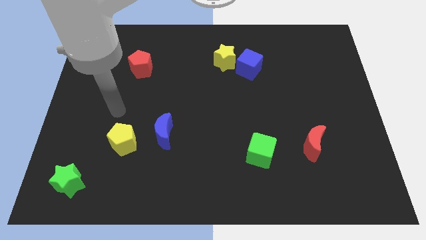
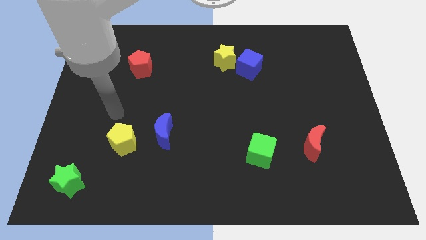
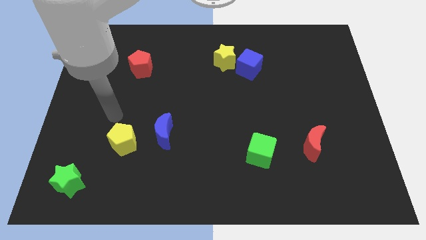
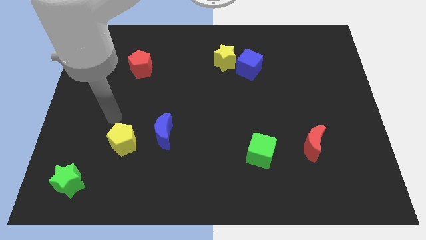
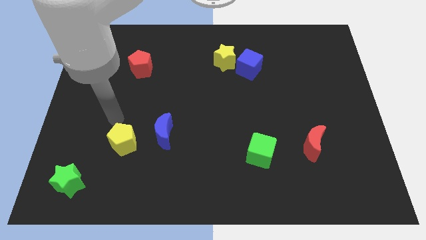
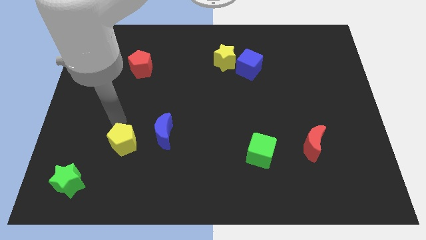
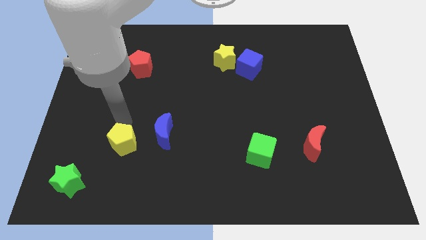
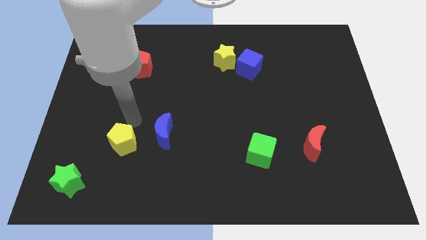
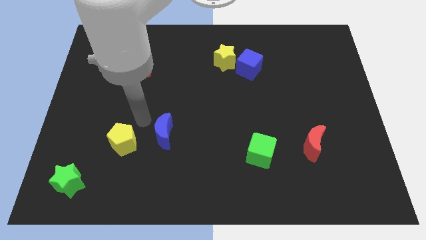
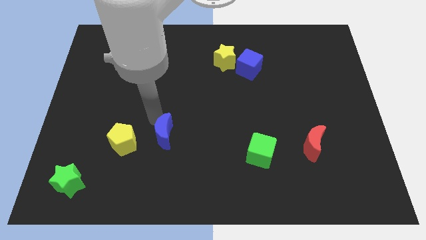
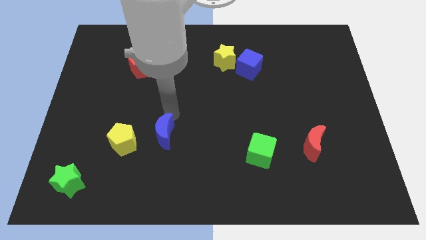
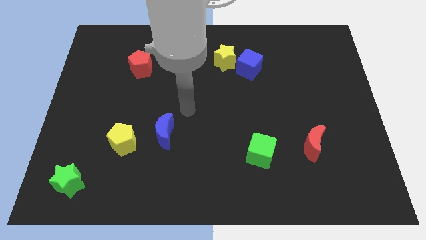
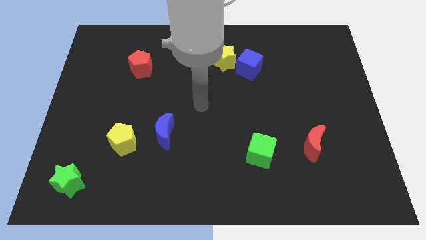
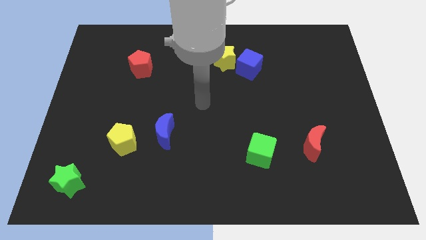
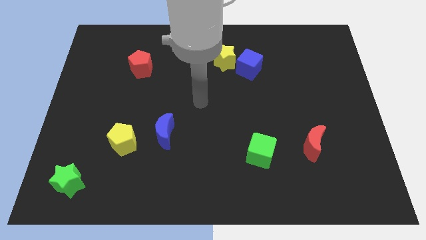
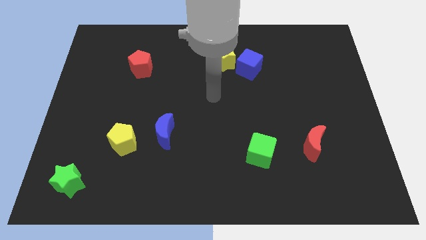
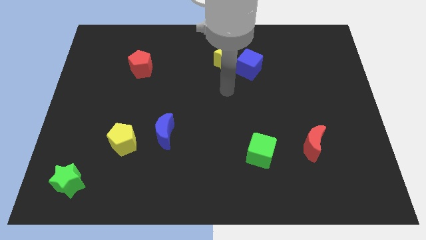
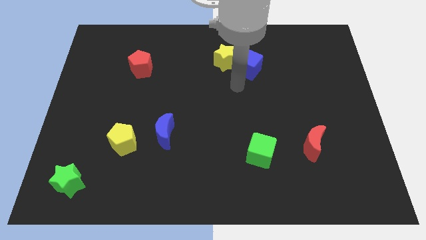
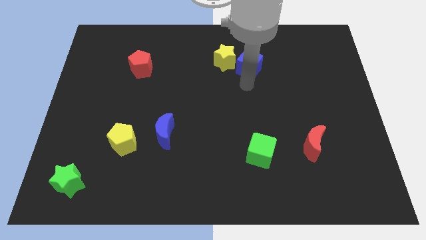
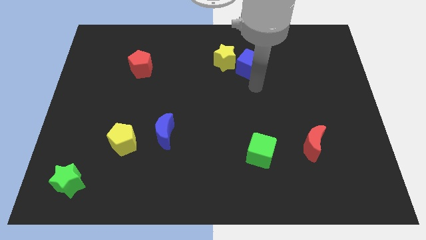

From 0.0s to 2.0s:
place the arm below the blue cube

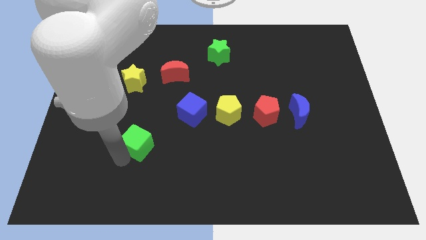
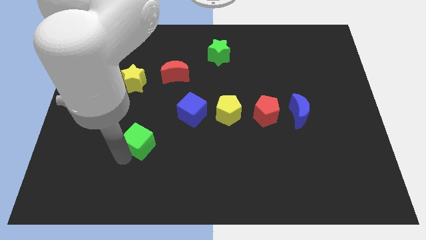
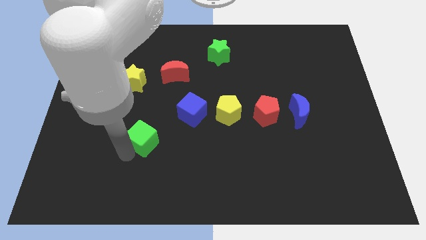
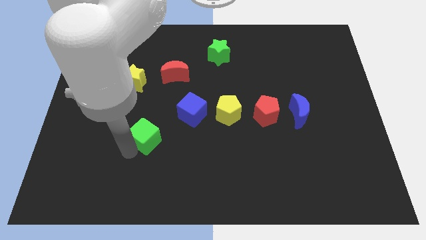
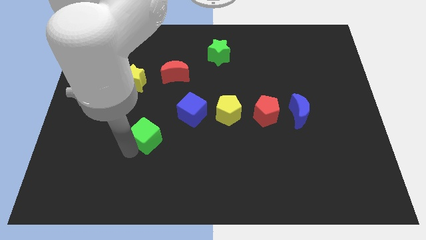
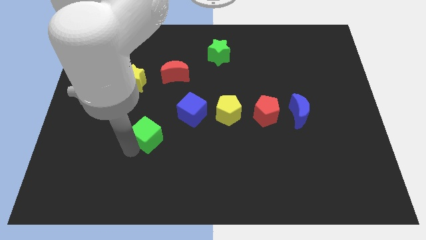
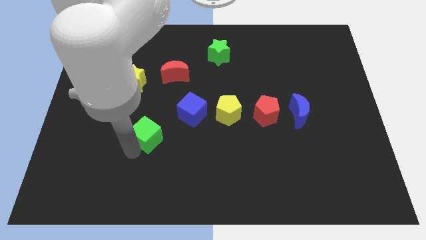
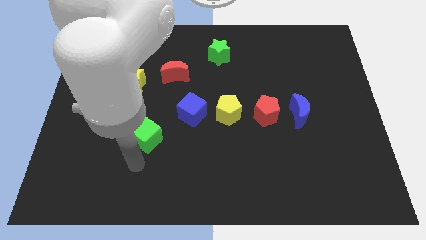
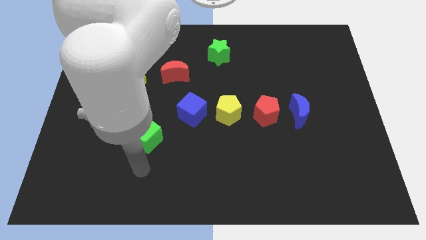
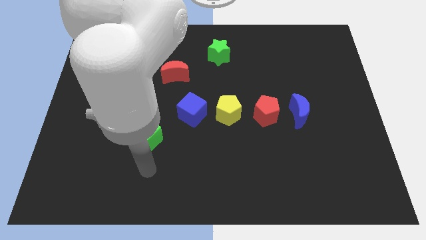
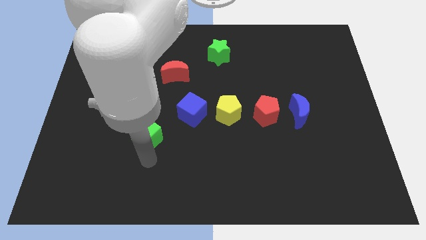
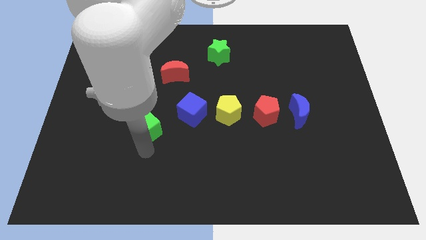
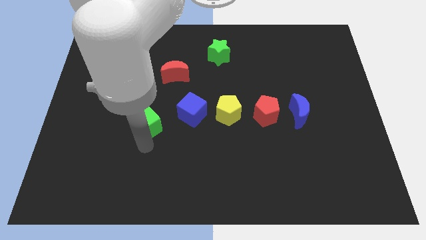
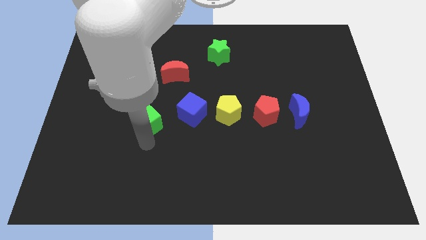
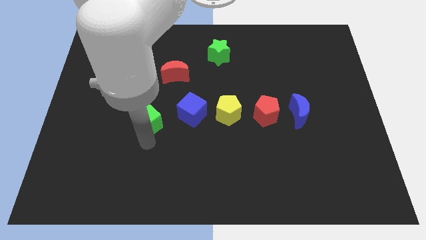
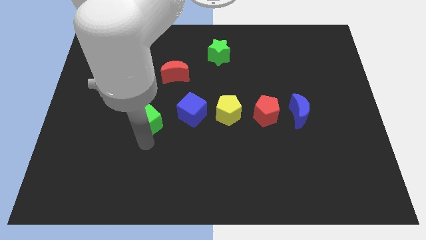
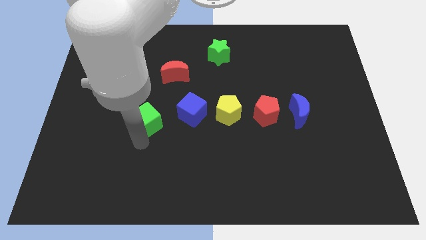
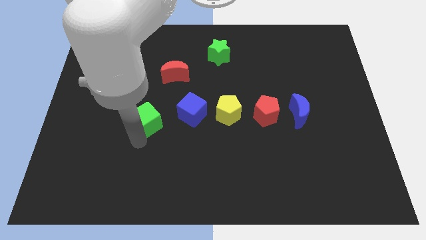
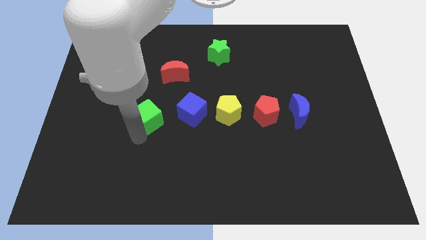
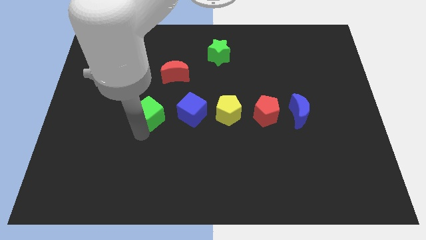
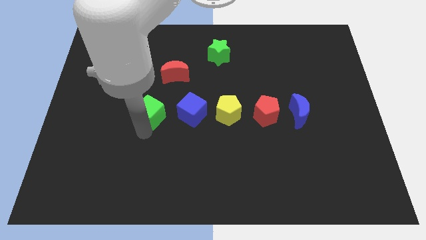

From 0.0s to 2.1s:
place the green cube parallel to the left of the blue cube

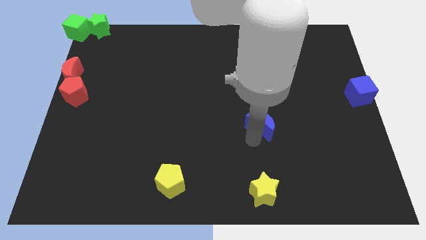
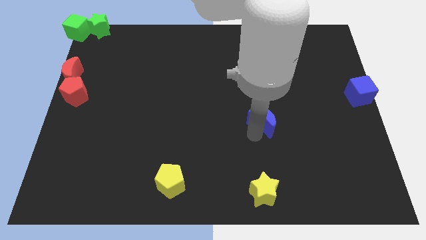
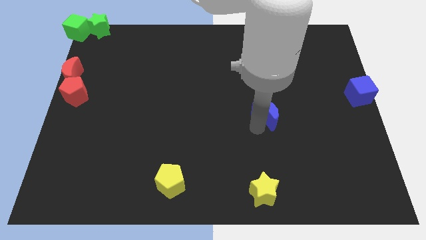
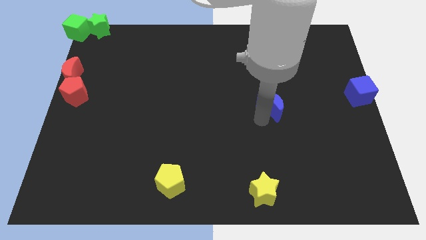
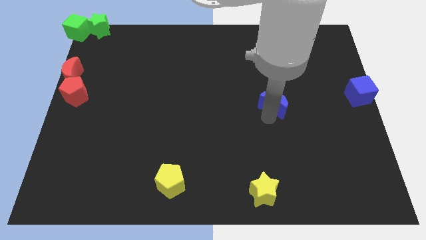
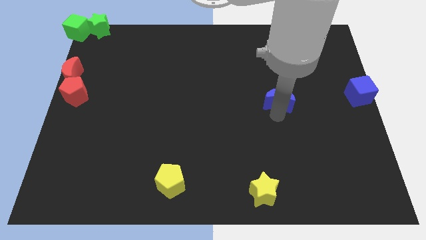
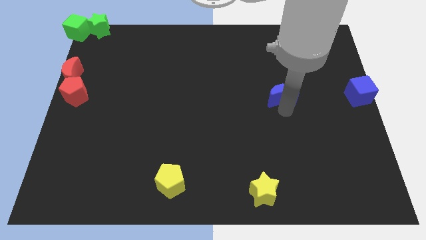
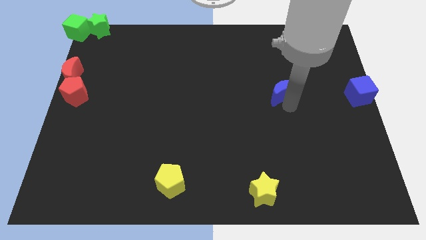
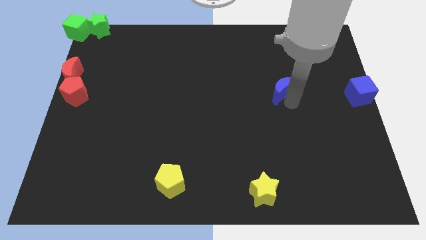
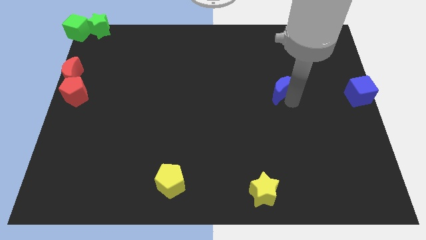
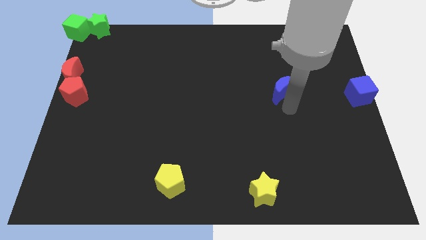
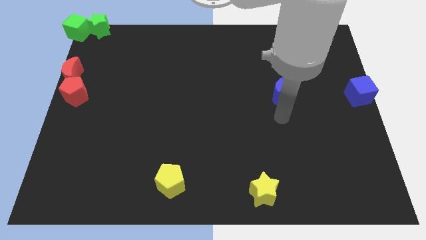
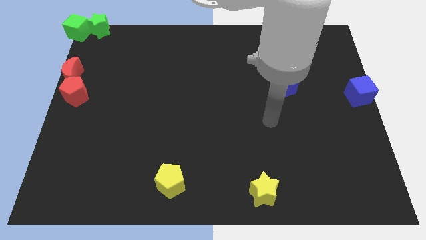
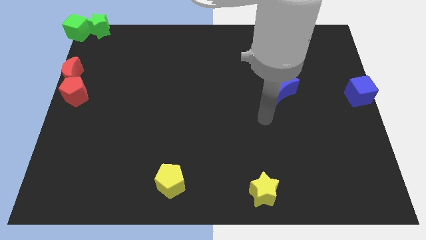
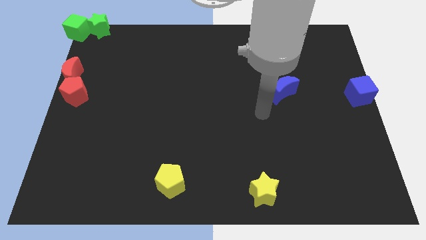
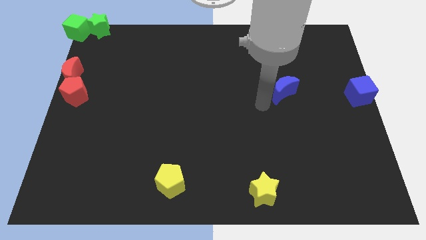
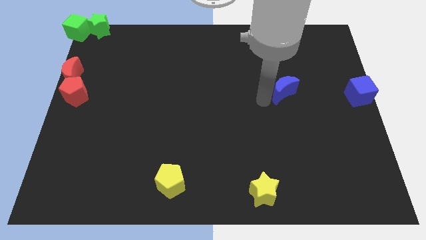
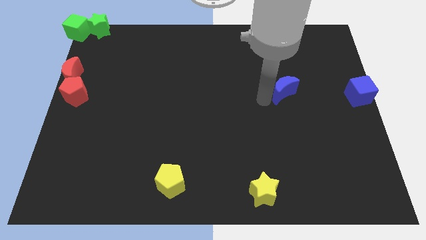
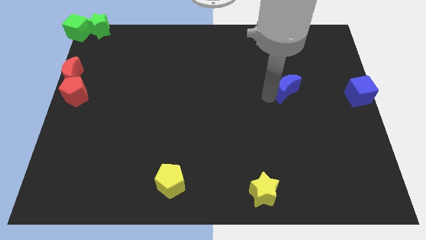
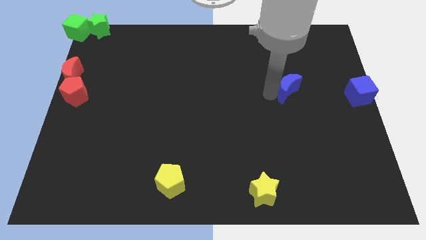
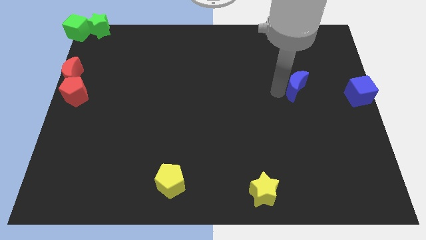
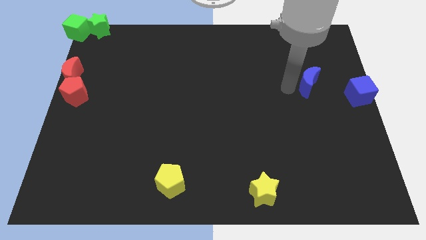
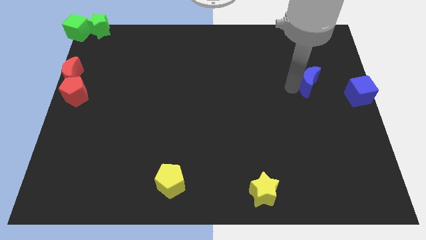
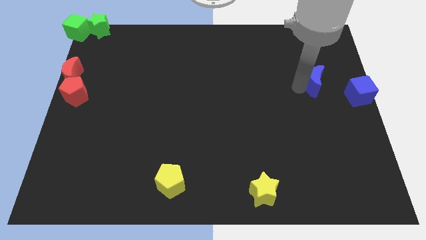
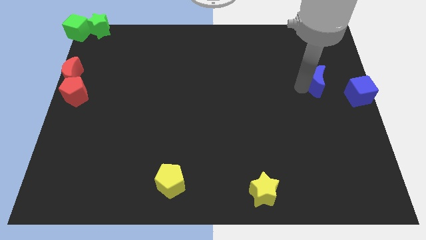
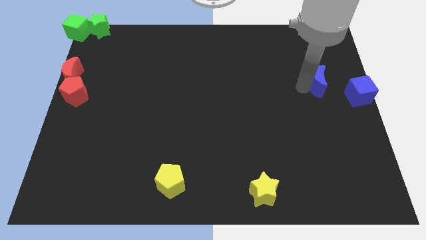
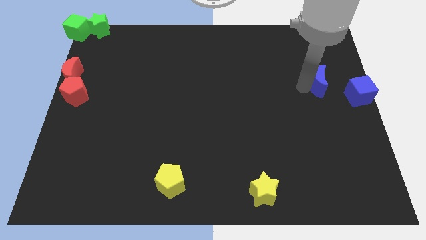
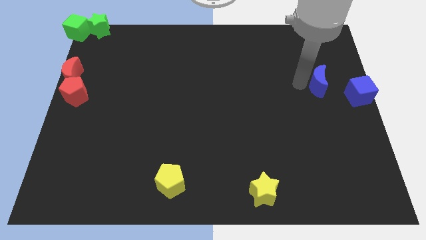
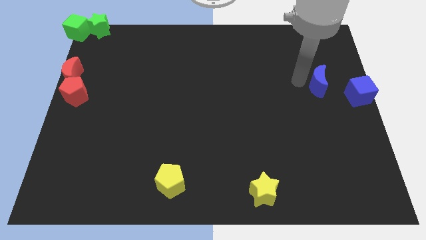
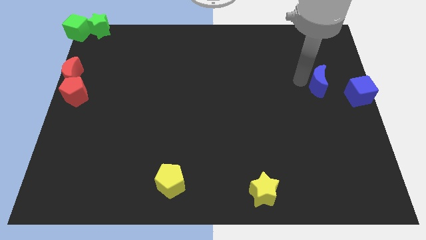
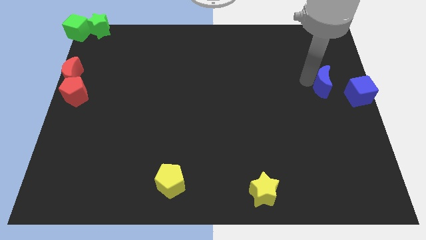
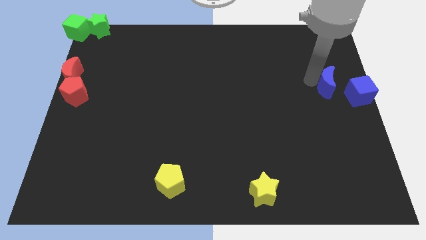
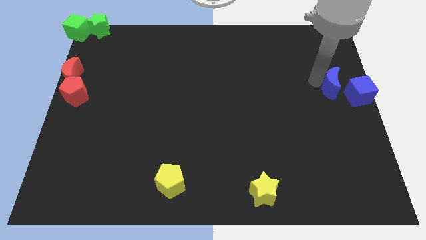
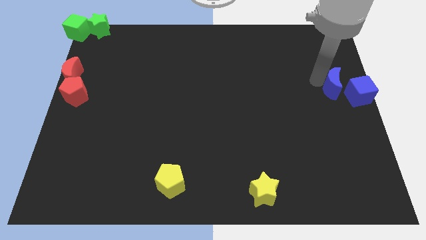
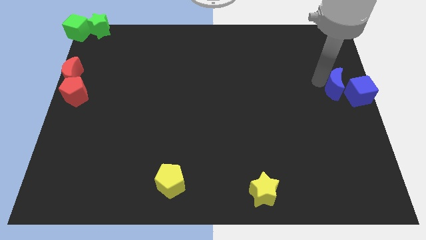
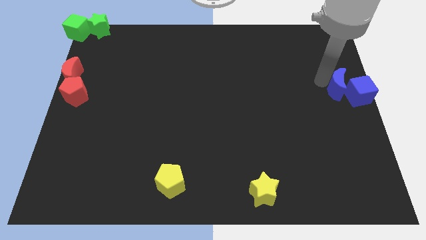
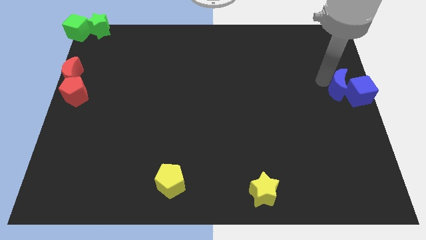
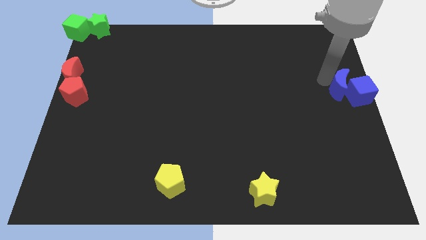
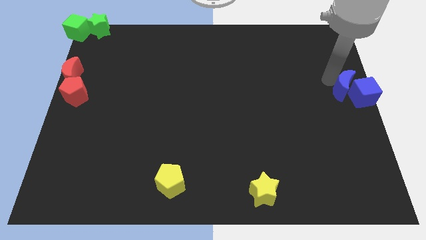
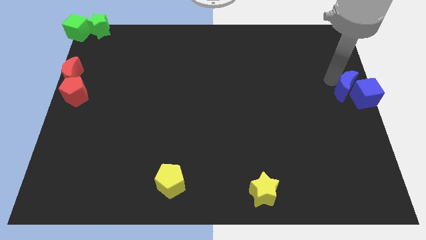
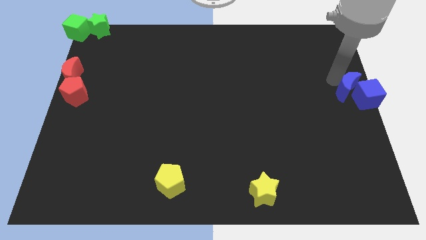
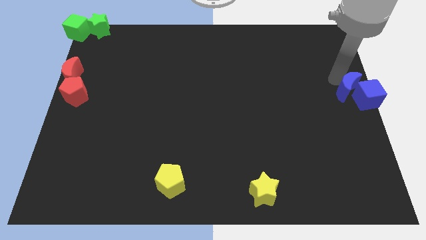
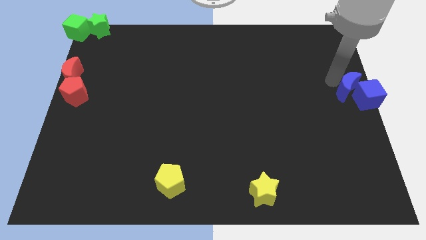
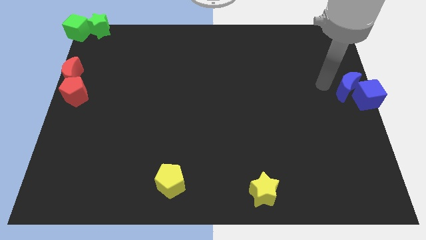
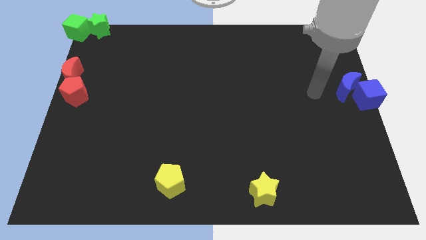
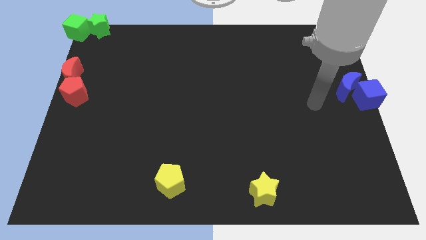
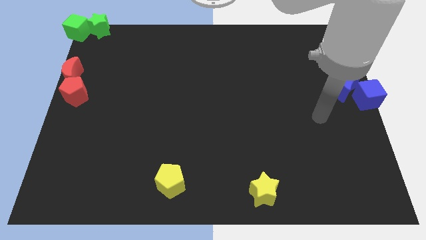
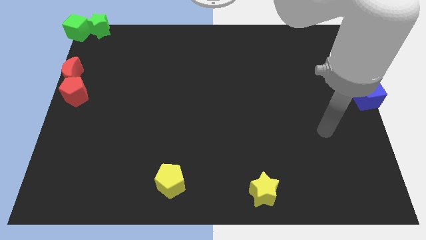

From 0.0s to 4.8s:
move the blue crescent left to blue cube towards the right center of the board

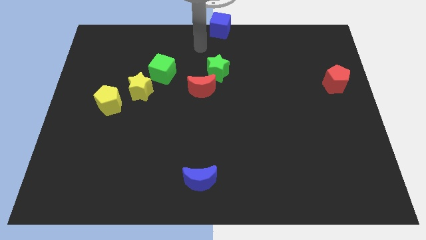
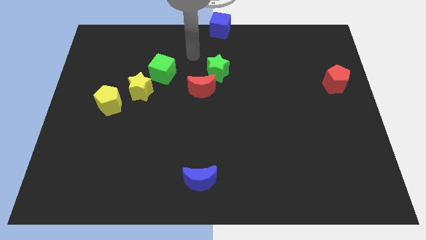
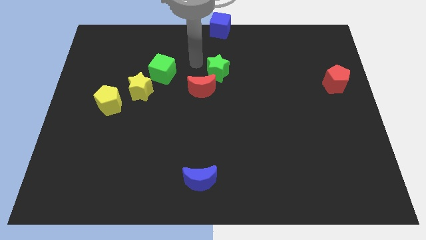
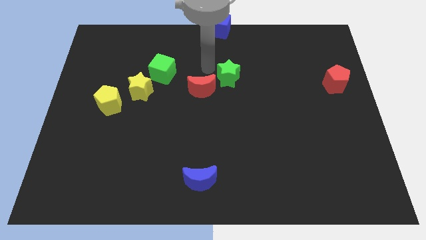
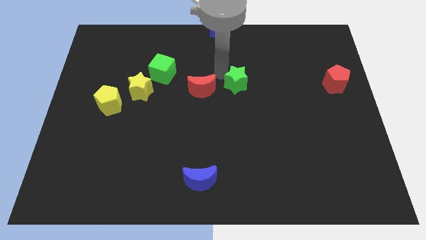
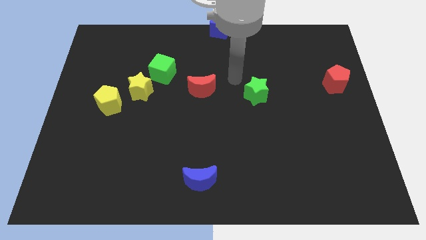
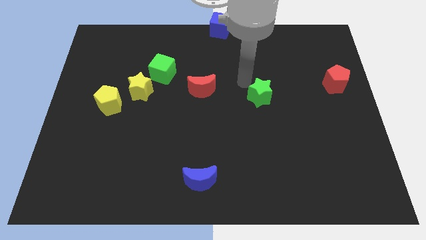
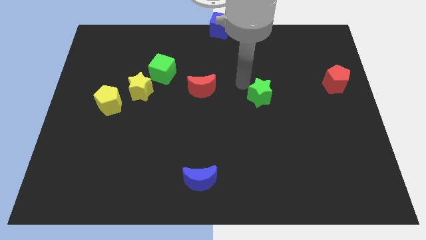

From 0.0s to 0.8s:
move the green star away from the red crescent
